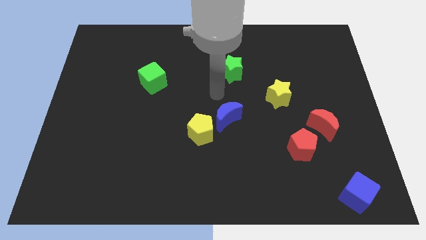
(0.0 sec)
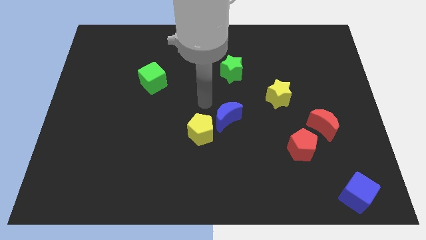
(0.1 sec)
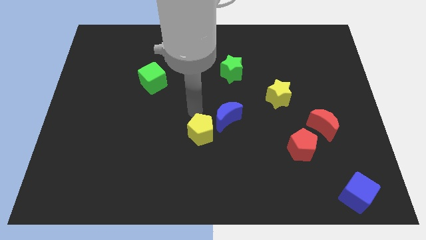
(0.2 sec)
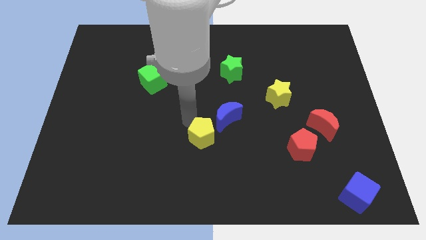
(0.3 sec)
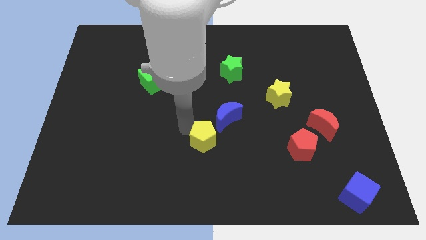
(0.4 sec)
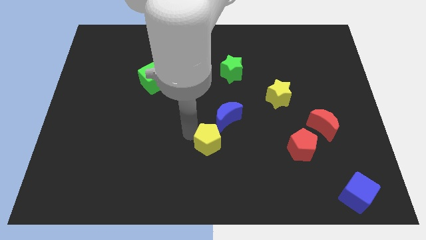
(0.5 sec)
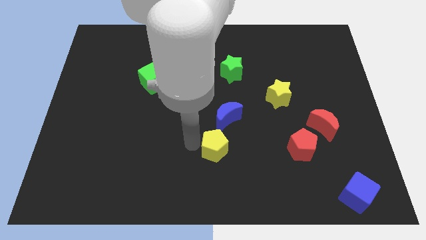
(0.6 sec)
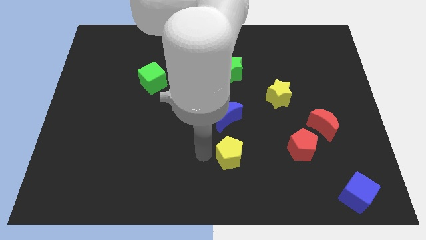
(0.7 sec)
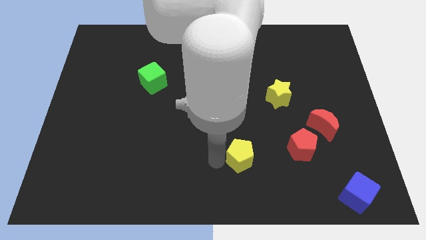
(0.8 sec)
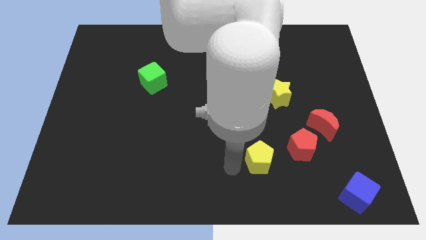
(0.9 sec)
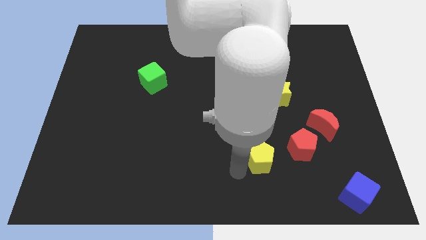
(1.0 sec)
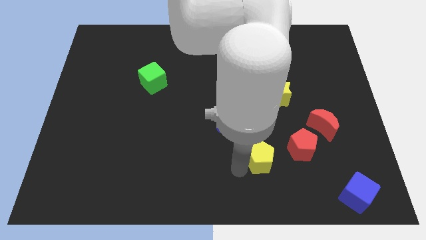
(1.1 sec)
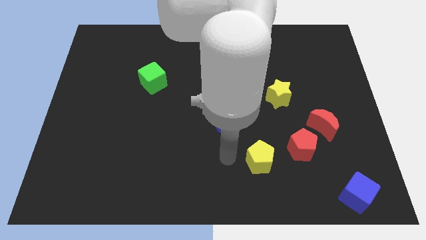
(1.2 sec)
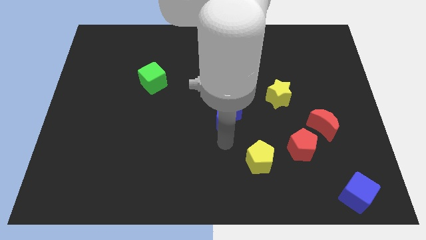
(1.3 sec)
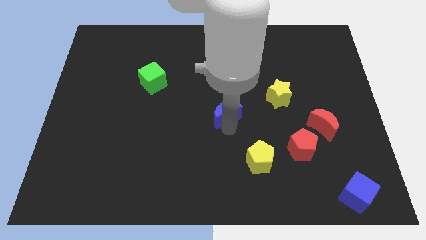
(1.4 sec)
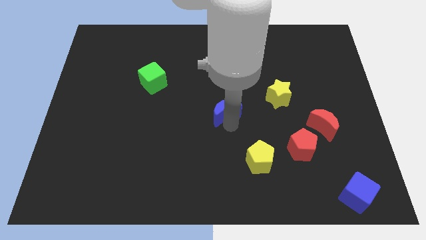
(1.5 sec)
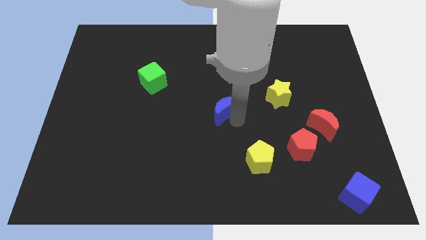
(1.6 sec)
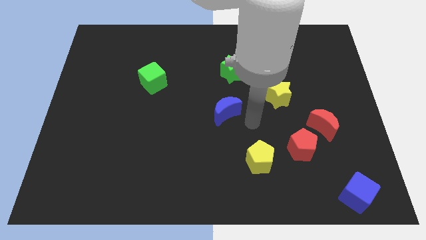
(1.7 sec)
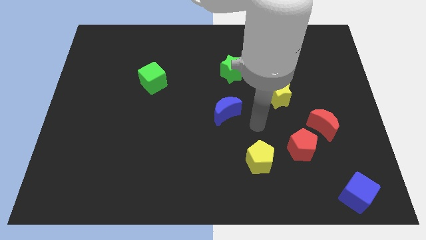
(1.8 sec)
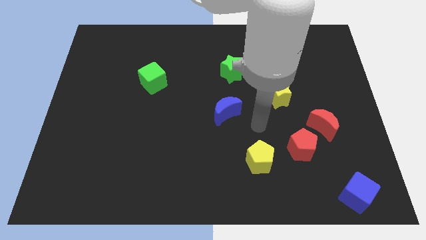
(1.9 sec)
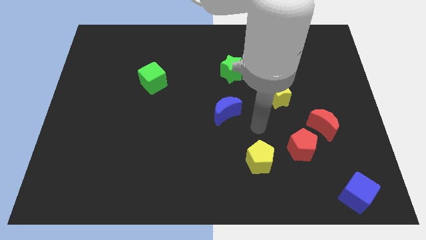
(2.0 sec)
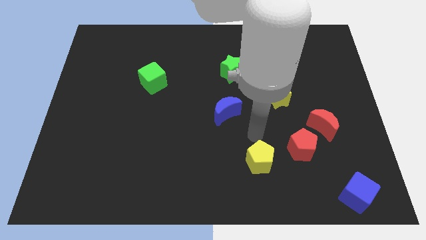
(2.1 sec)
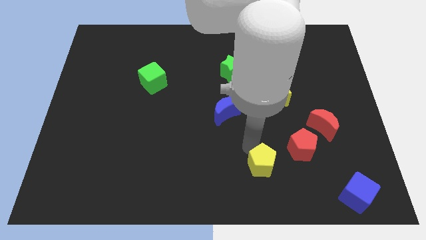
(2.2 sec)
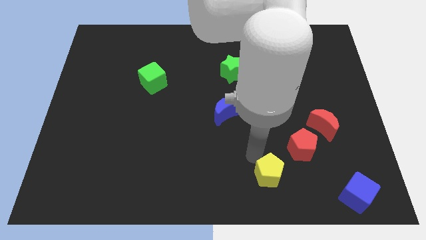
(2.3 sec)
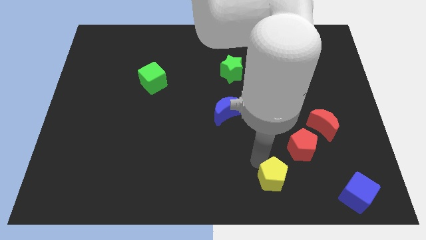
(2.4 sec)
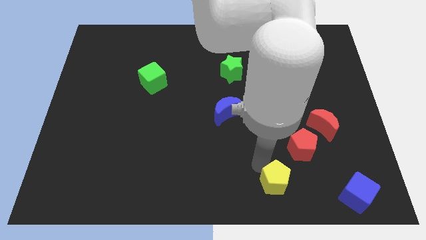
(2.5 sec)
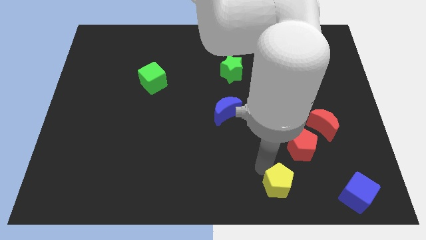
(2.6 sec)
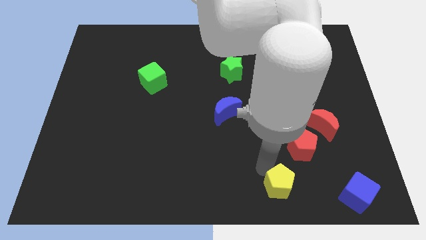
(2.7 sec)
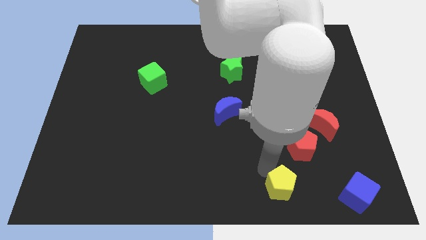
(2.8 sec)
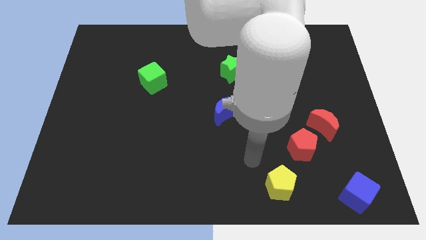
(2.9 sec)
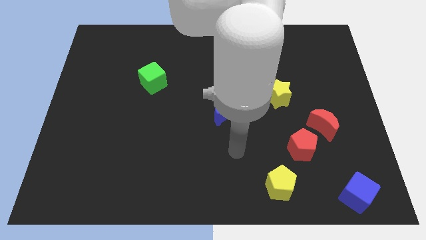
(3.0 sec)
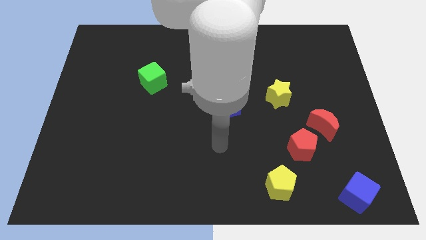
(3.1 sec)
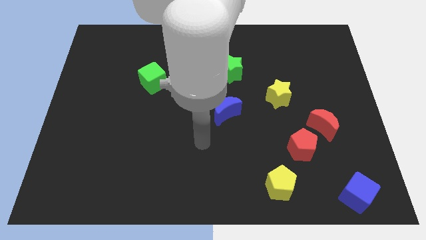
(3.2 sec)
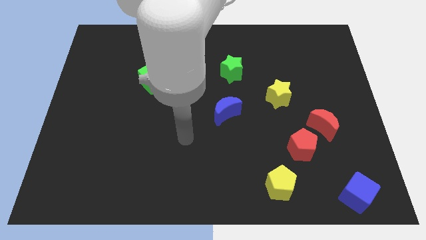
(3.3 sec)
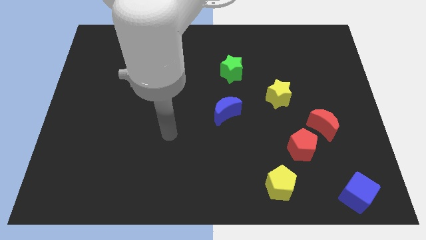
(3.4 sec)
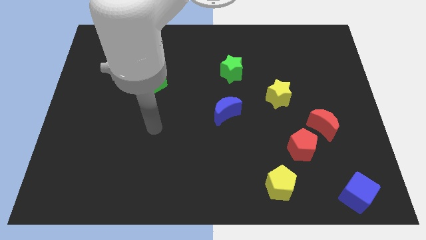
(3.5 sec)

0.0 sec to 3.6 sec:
move the yellow pentagon towards the blue cube at the bottom of the board

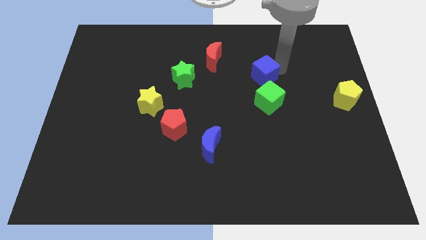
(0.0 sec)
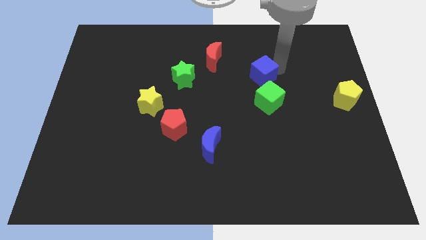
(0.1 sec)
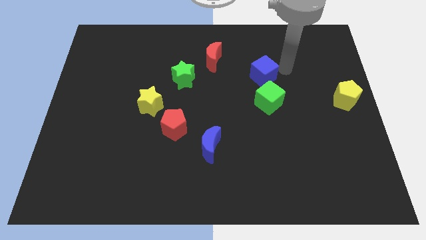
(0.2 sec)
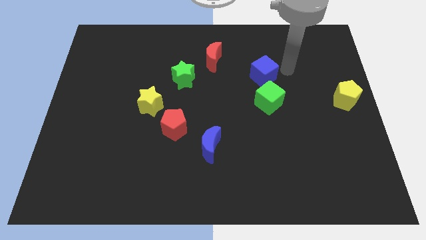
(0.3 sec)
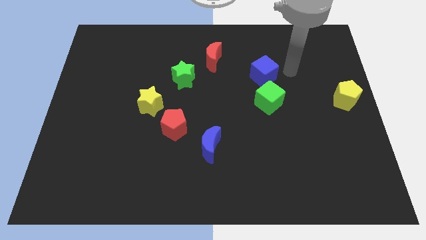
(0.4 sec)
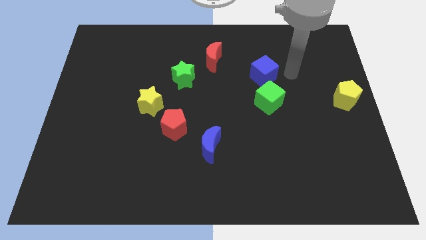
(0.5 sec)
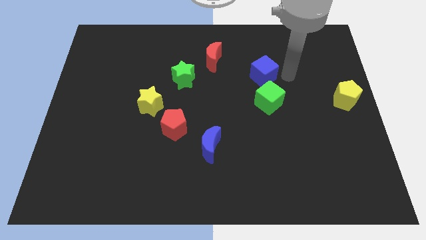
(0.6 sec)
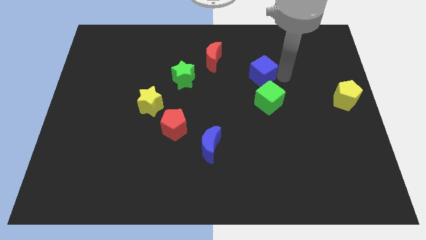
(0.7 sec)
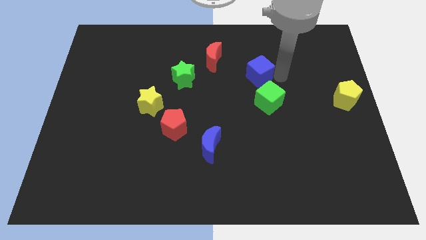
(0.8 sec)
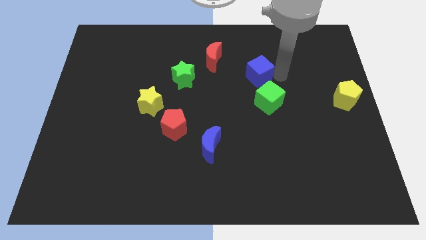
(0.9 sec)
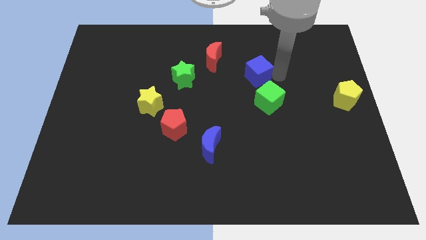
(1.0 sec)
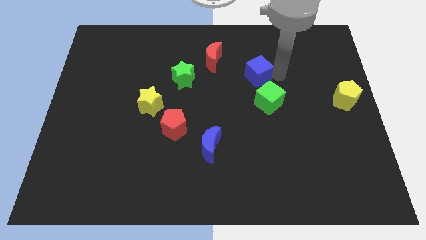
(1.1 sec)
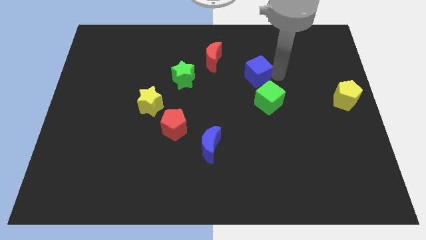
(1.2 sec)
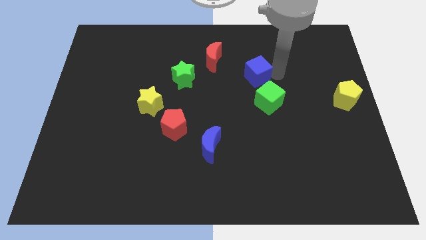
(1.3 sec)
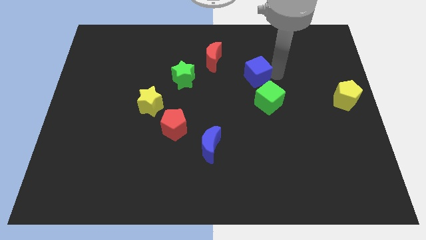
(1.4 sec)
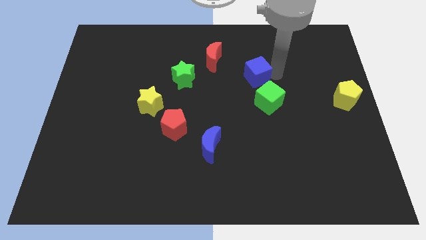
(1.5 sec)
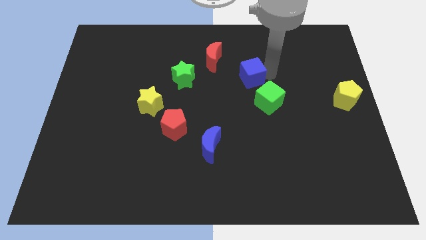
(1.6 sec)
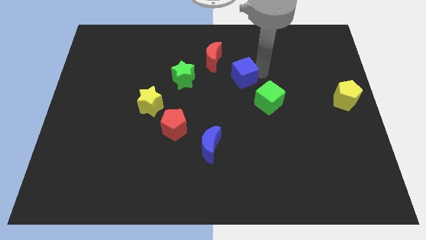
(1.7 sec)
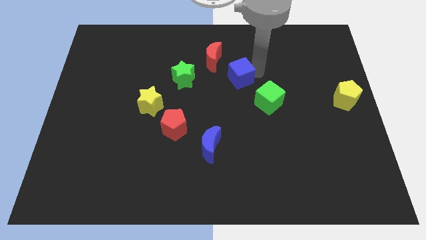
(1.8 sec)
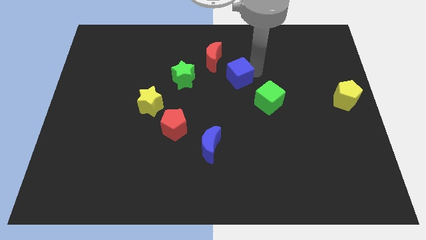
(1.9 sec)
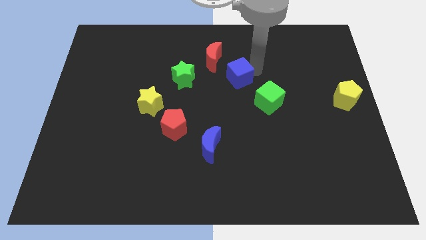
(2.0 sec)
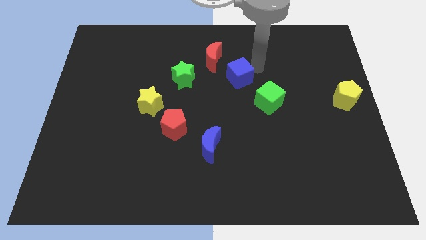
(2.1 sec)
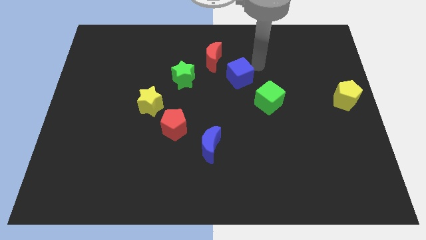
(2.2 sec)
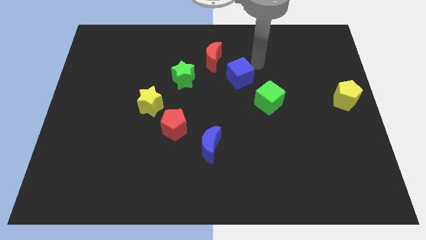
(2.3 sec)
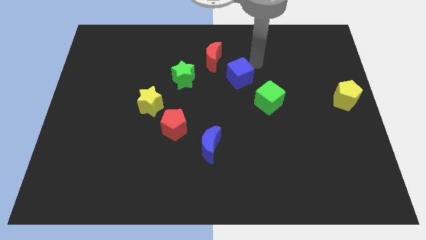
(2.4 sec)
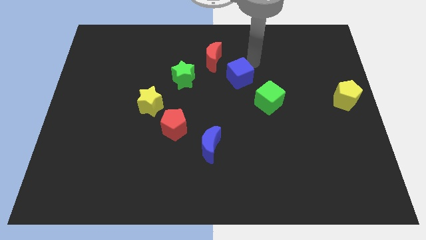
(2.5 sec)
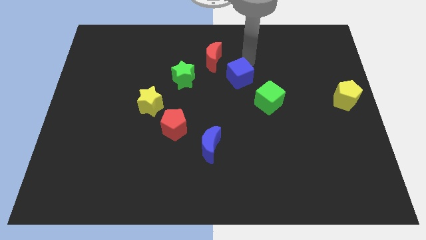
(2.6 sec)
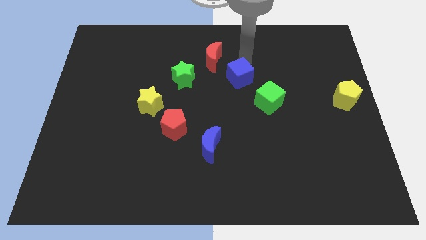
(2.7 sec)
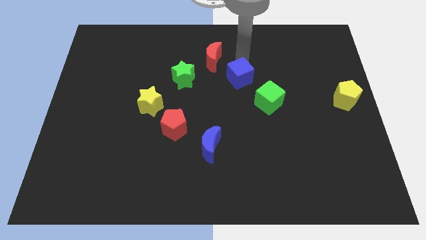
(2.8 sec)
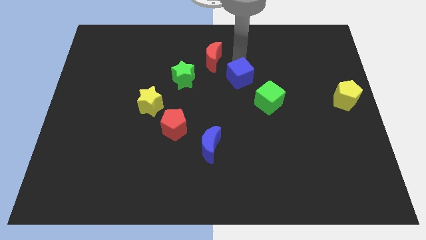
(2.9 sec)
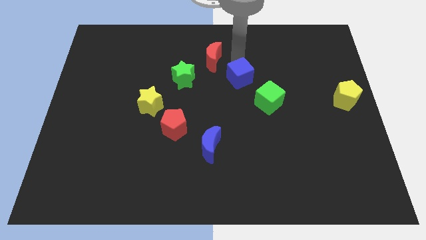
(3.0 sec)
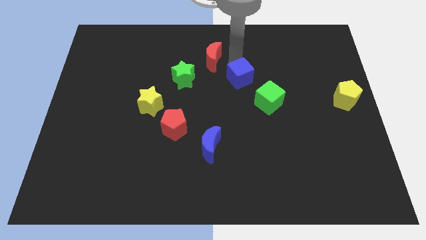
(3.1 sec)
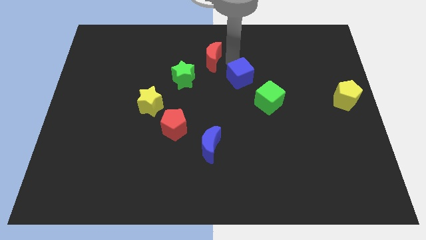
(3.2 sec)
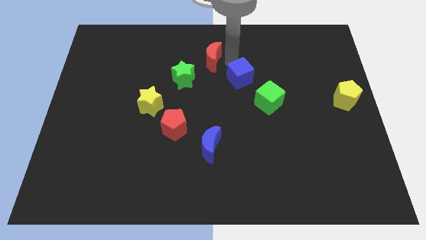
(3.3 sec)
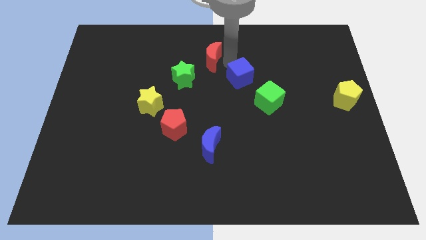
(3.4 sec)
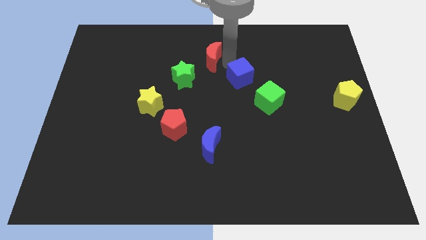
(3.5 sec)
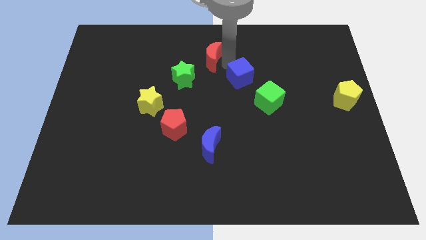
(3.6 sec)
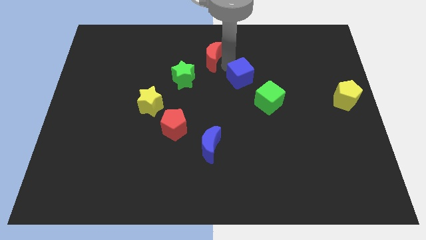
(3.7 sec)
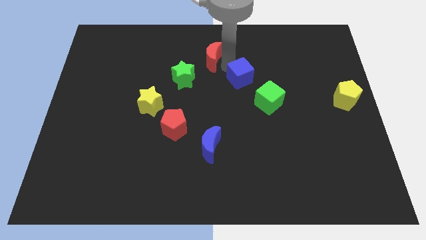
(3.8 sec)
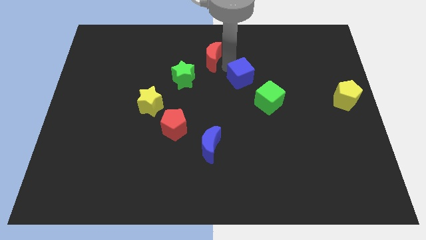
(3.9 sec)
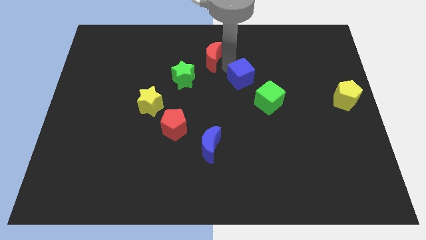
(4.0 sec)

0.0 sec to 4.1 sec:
move the blue cube to the top left of the green cube

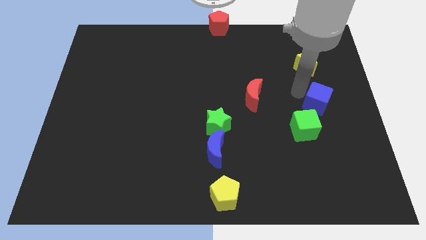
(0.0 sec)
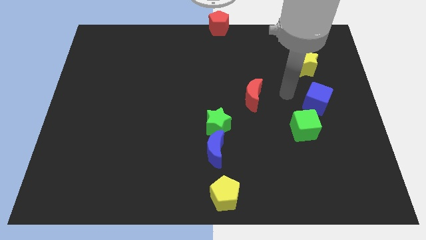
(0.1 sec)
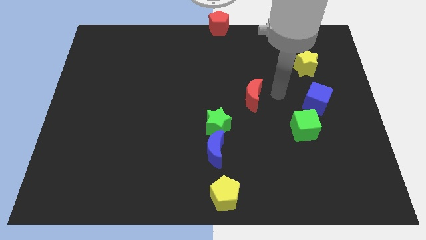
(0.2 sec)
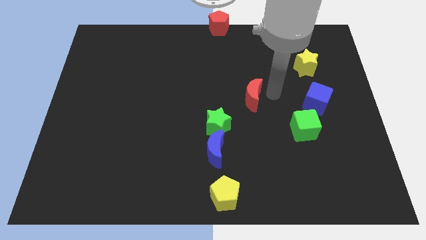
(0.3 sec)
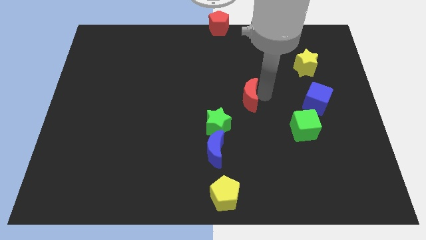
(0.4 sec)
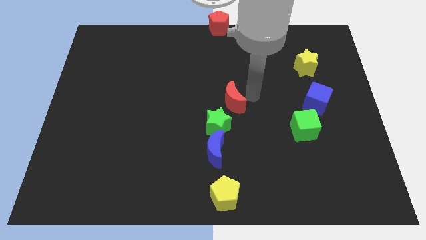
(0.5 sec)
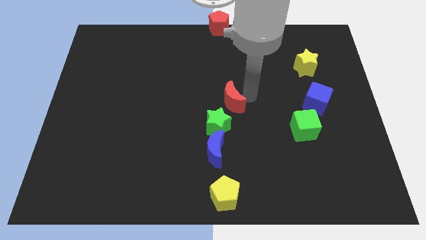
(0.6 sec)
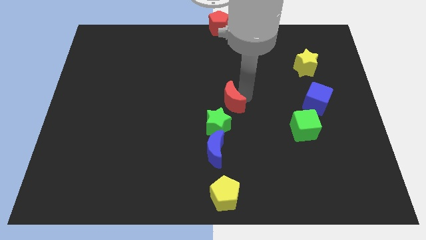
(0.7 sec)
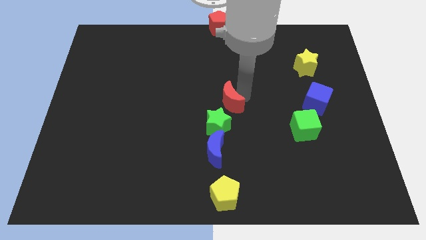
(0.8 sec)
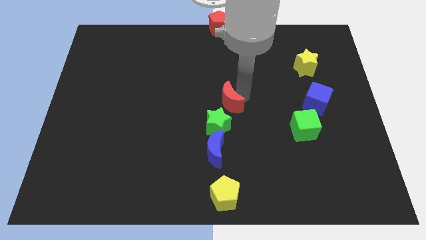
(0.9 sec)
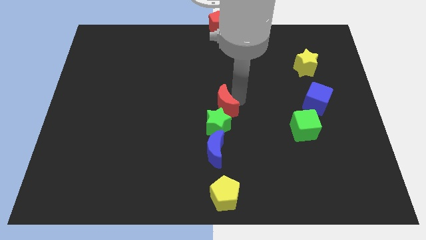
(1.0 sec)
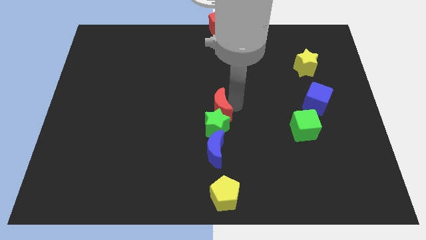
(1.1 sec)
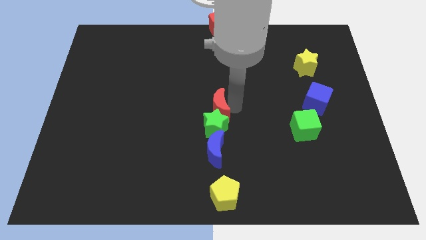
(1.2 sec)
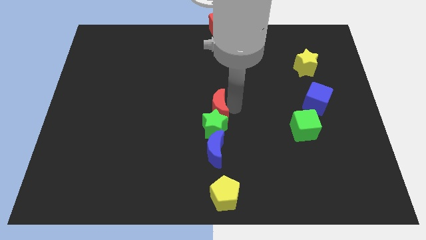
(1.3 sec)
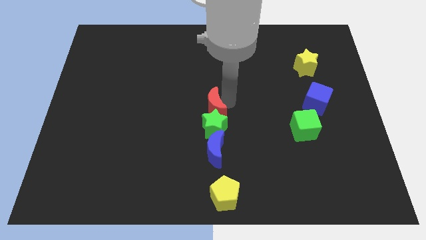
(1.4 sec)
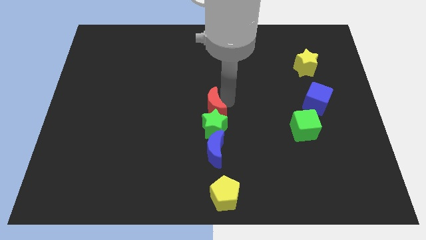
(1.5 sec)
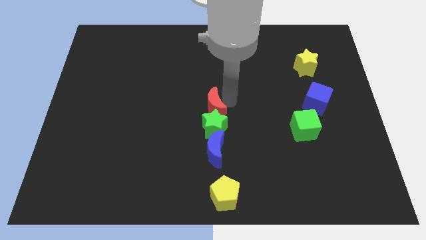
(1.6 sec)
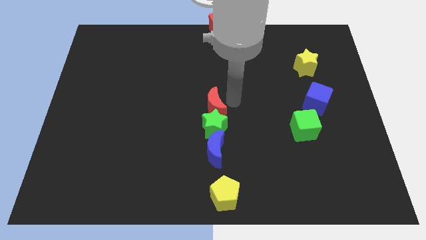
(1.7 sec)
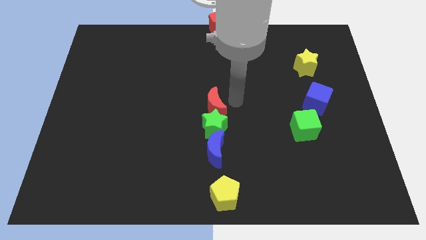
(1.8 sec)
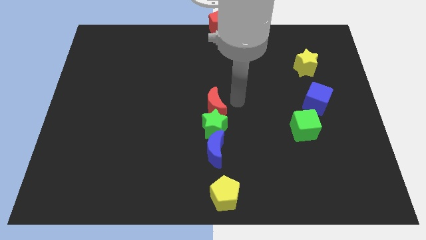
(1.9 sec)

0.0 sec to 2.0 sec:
place the red moon on top of the green star
